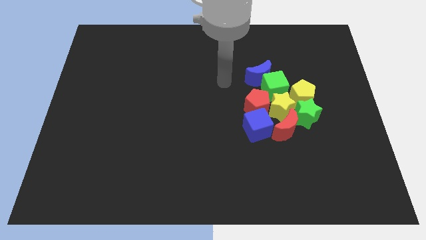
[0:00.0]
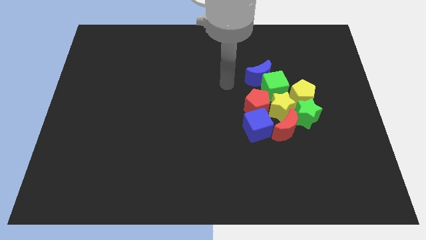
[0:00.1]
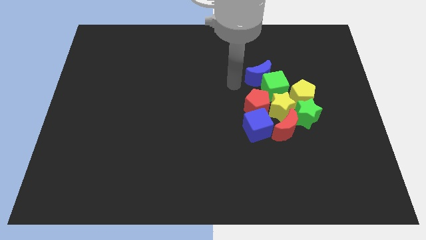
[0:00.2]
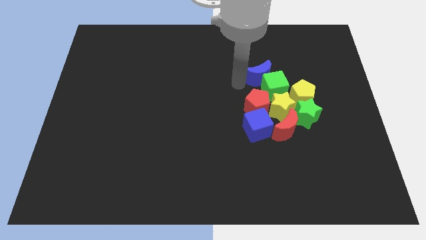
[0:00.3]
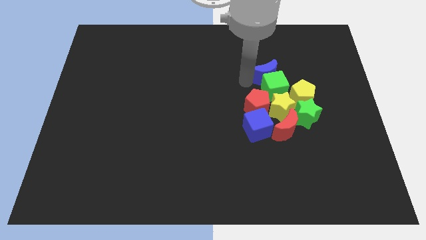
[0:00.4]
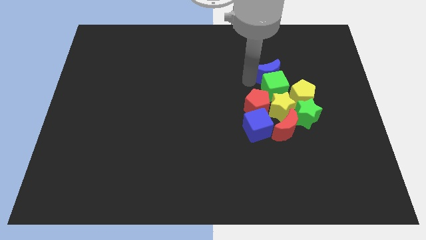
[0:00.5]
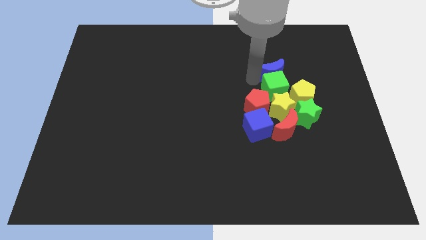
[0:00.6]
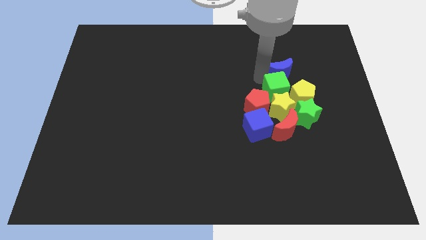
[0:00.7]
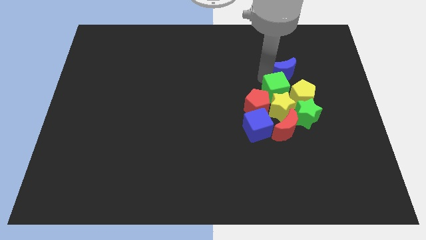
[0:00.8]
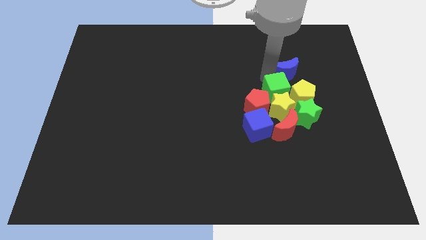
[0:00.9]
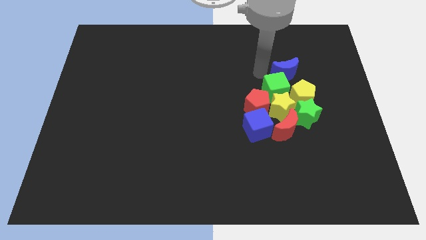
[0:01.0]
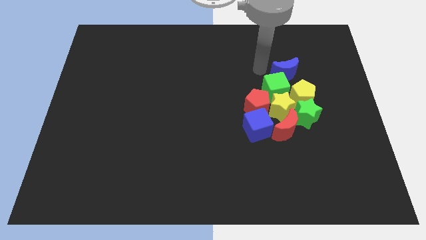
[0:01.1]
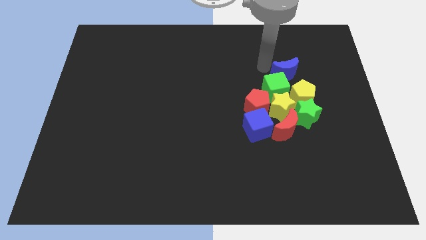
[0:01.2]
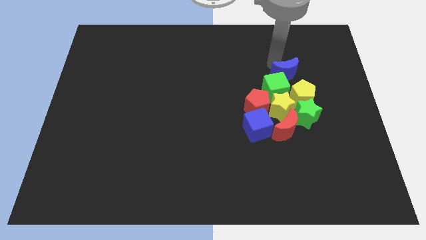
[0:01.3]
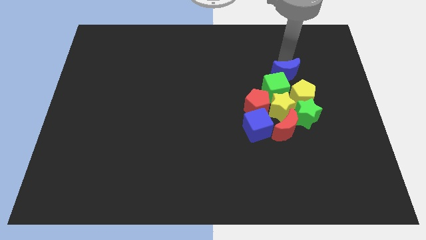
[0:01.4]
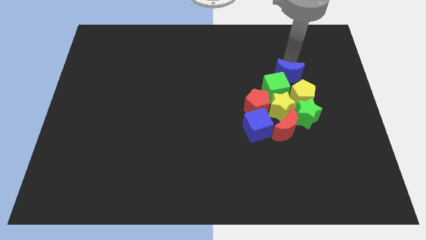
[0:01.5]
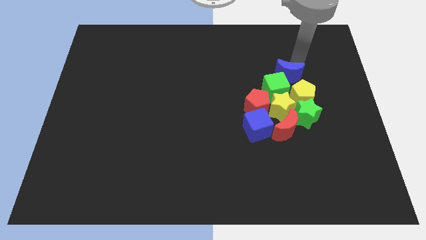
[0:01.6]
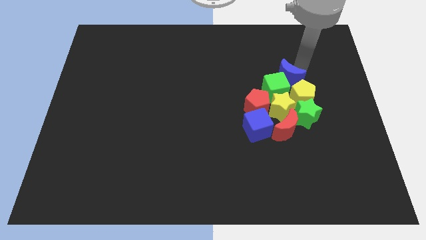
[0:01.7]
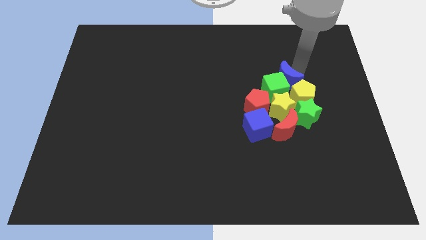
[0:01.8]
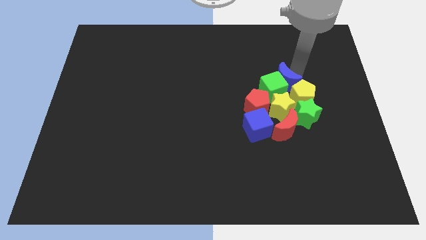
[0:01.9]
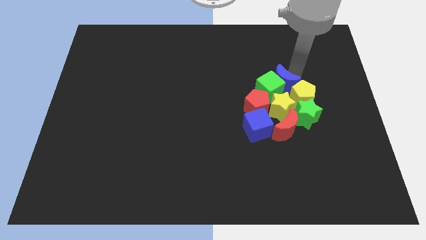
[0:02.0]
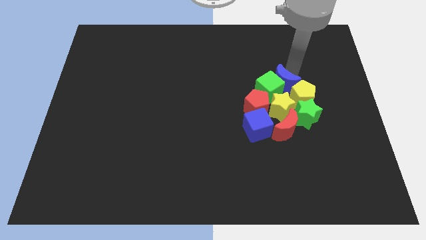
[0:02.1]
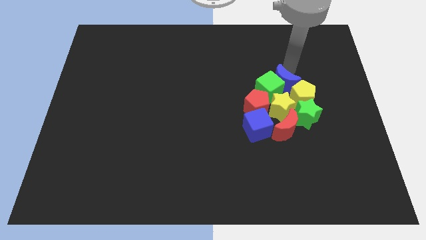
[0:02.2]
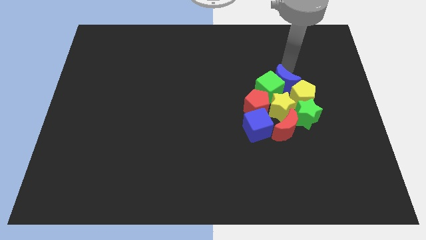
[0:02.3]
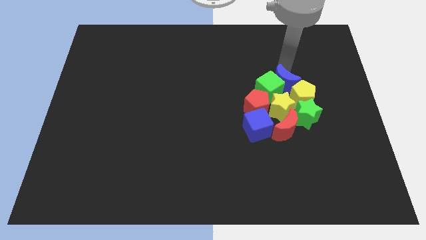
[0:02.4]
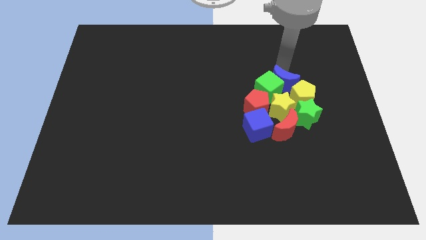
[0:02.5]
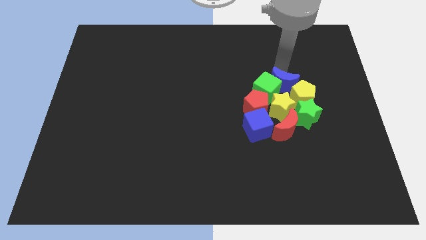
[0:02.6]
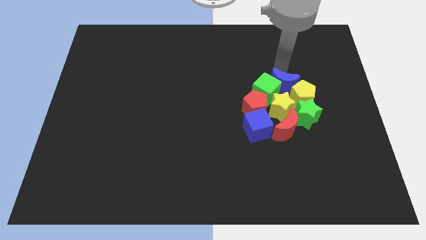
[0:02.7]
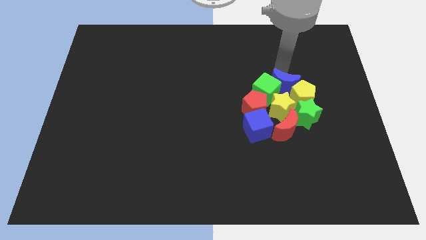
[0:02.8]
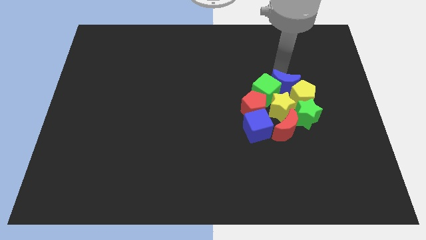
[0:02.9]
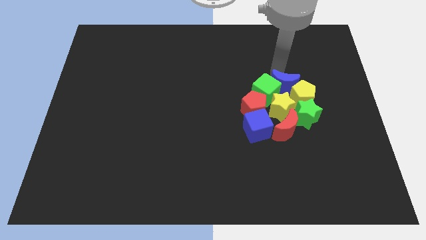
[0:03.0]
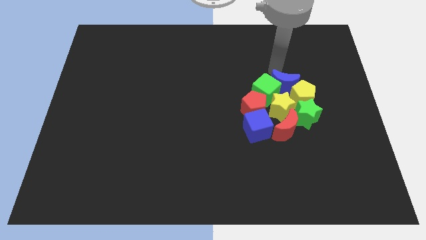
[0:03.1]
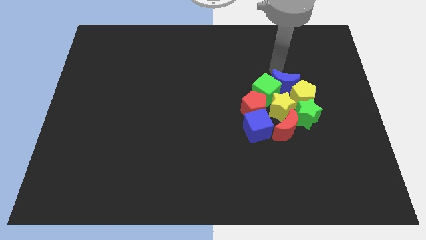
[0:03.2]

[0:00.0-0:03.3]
place the blue moon in between the green cube and the yellow pentagon

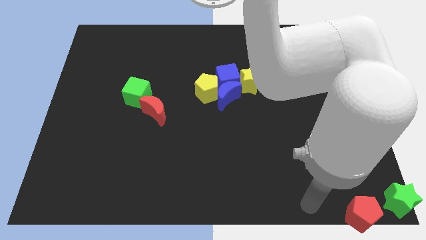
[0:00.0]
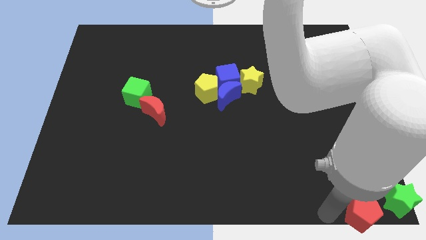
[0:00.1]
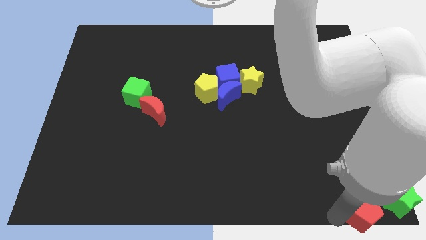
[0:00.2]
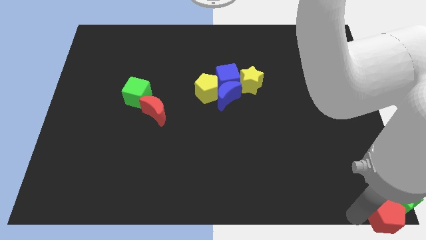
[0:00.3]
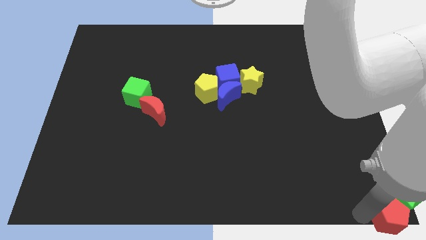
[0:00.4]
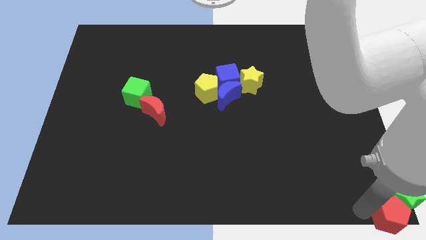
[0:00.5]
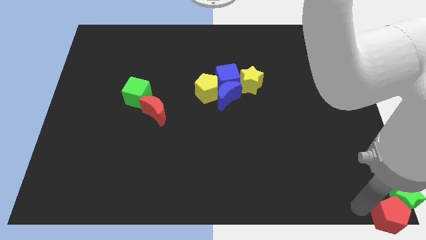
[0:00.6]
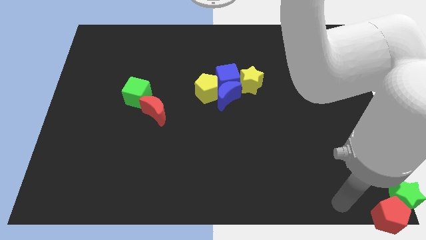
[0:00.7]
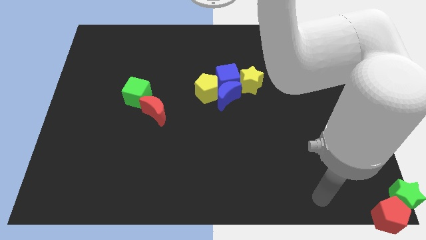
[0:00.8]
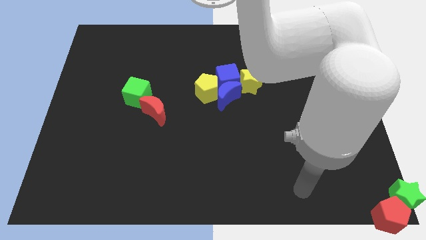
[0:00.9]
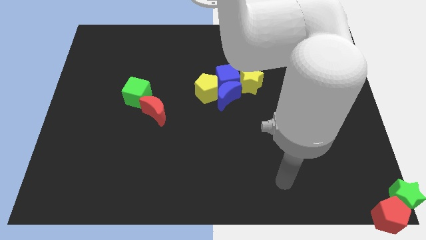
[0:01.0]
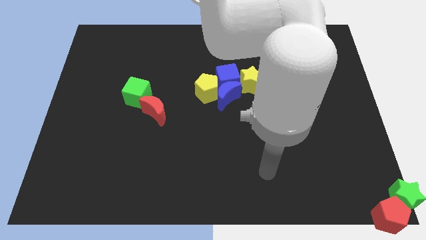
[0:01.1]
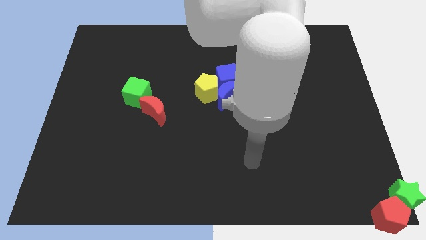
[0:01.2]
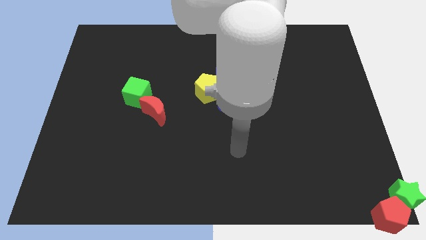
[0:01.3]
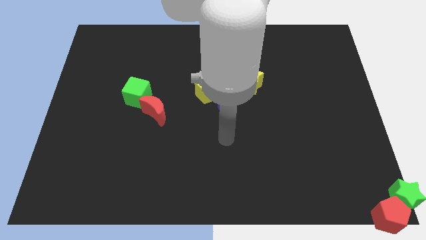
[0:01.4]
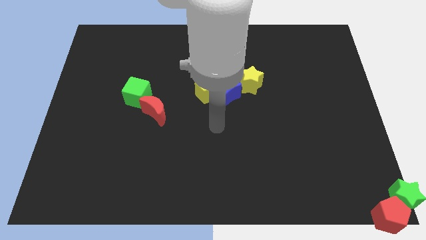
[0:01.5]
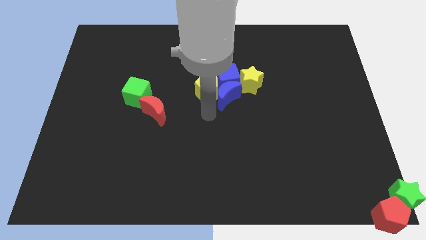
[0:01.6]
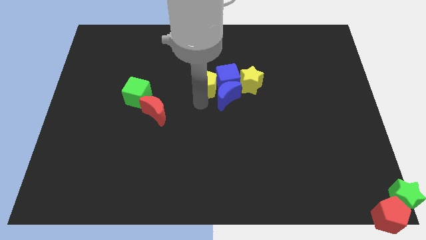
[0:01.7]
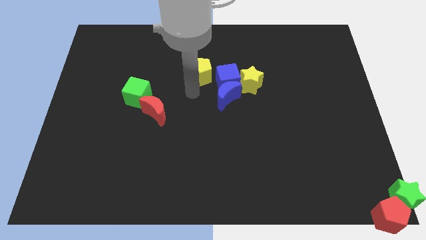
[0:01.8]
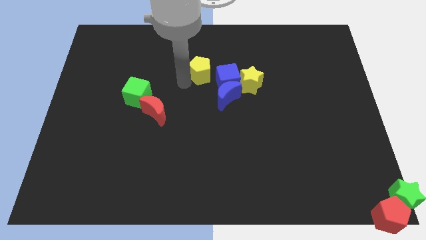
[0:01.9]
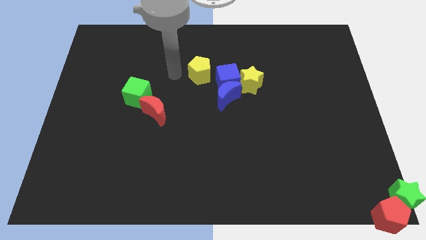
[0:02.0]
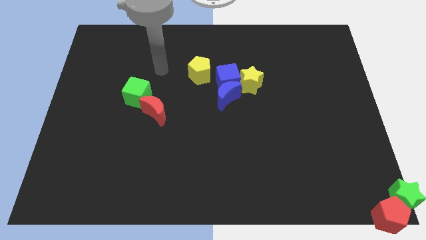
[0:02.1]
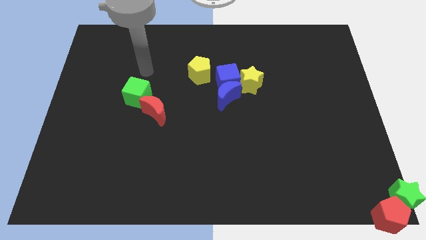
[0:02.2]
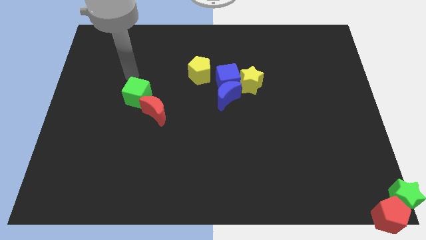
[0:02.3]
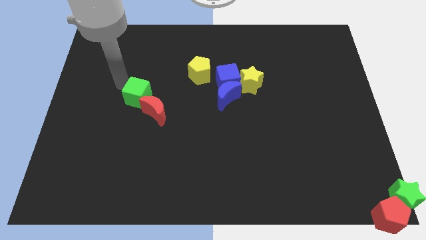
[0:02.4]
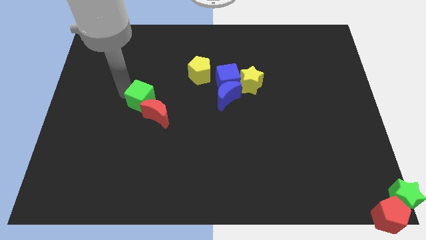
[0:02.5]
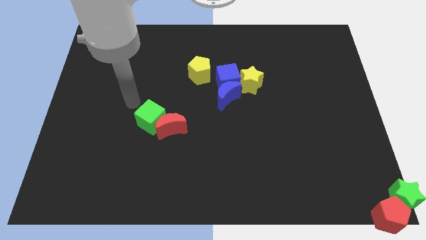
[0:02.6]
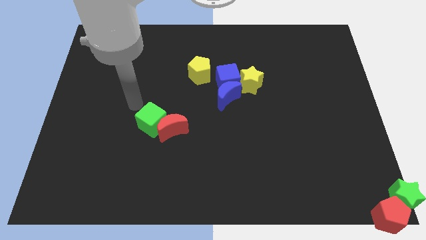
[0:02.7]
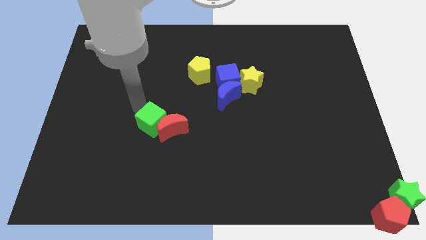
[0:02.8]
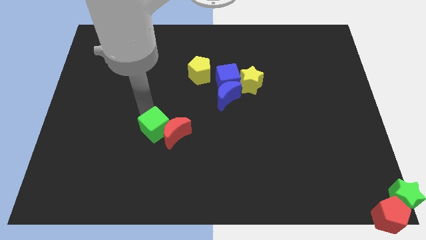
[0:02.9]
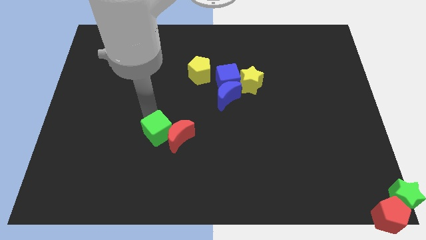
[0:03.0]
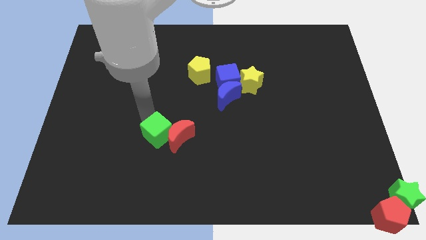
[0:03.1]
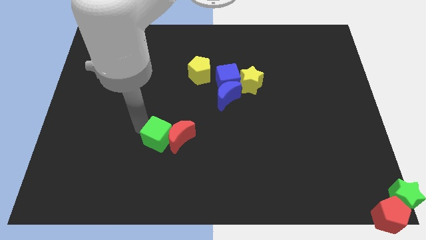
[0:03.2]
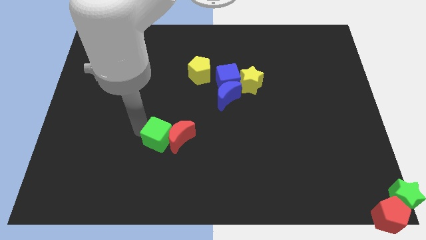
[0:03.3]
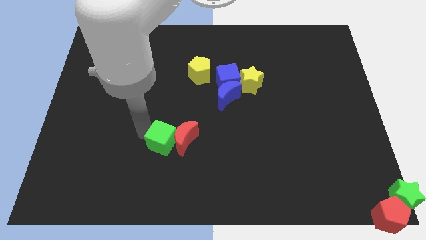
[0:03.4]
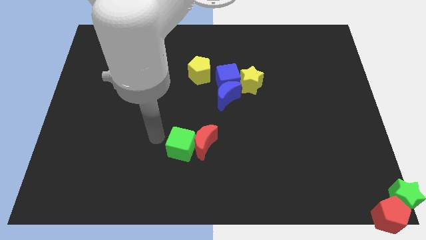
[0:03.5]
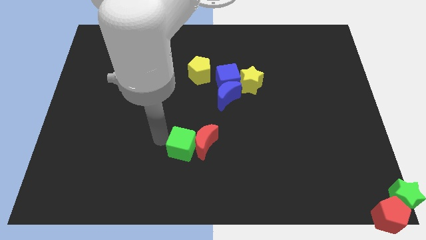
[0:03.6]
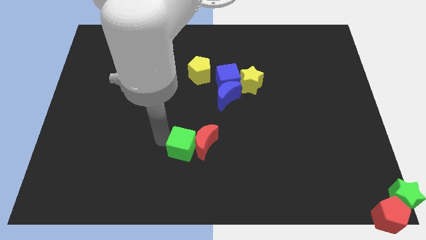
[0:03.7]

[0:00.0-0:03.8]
slide the green cube and red moon towards the bottom centre of the board

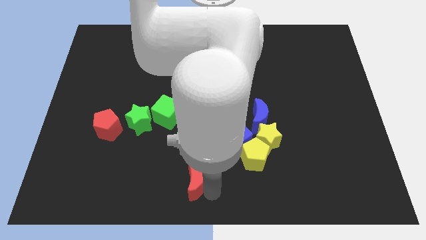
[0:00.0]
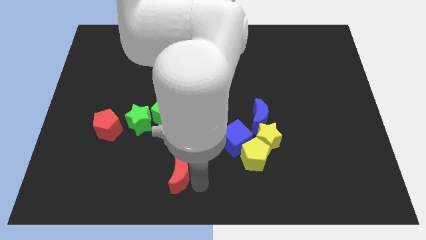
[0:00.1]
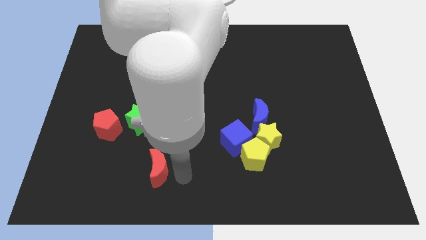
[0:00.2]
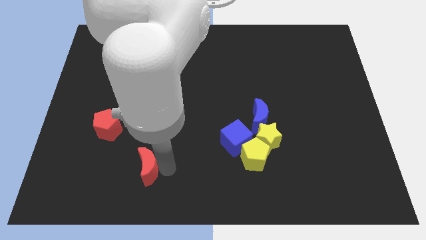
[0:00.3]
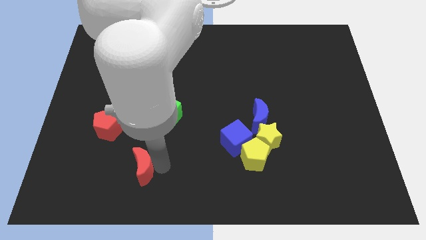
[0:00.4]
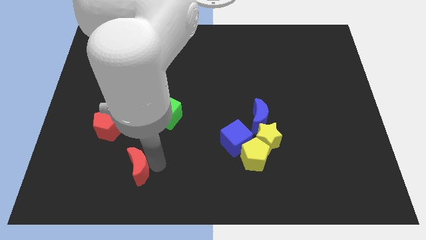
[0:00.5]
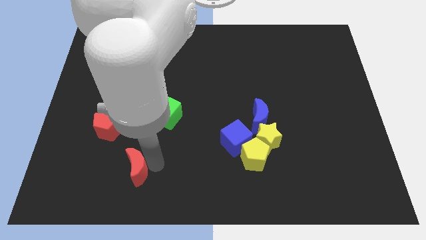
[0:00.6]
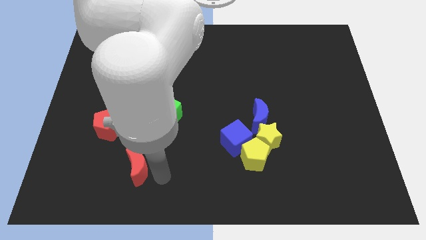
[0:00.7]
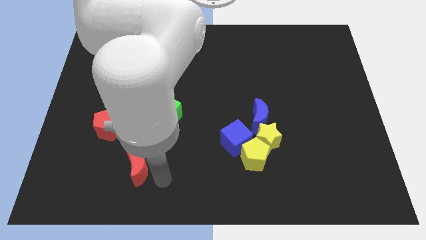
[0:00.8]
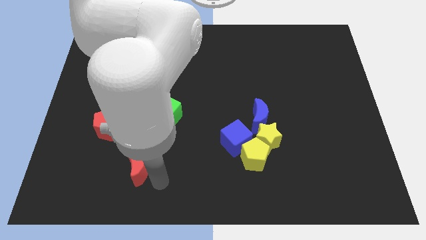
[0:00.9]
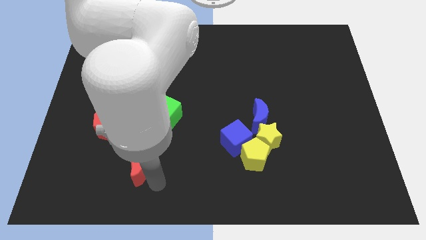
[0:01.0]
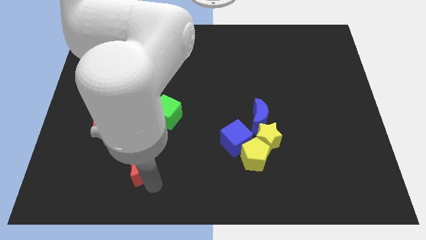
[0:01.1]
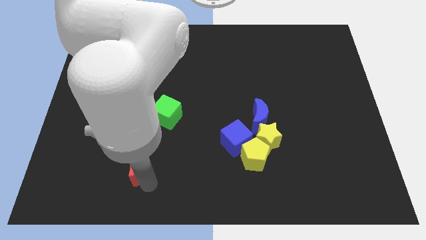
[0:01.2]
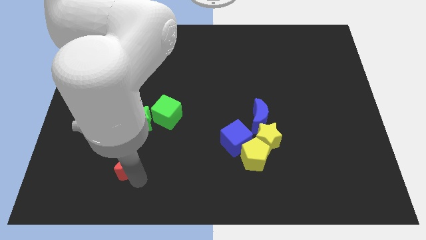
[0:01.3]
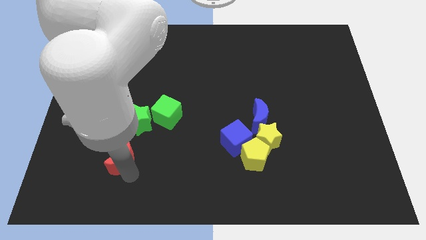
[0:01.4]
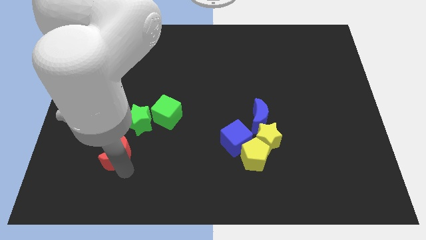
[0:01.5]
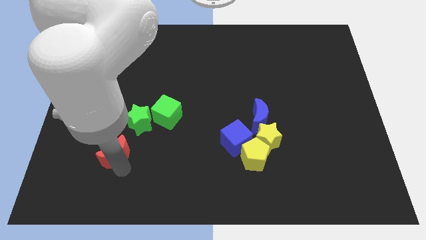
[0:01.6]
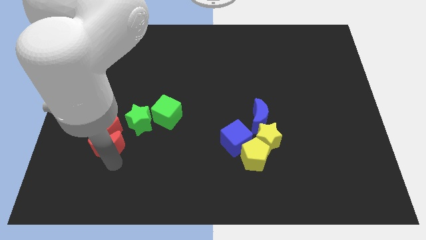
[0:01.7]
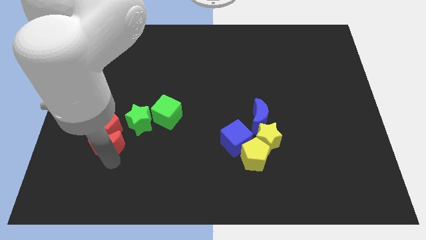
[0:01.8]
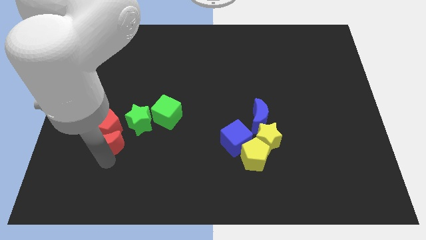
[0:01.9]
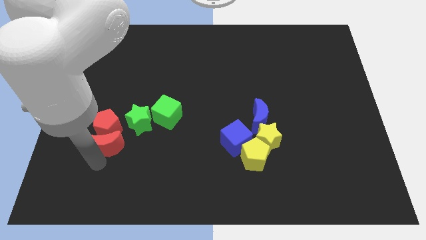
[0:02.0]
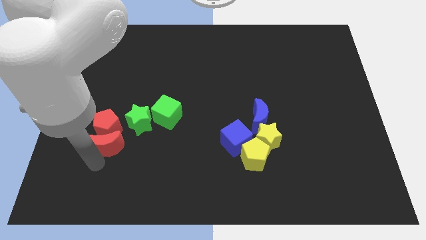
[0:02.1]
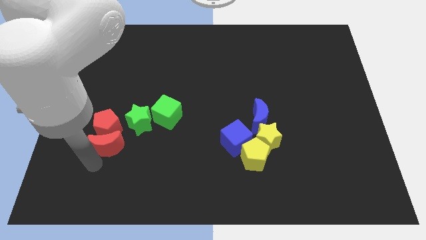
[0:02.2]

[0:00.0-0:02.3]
push the red crescent to the bottom of the red pentagon
